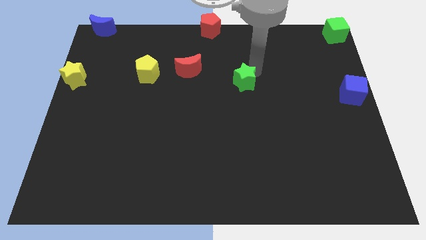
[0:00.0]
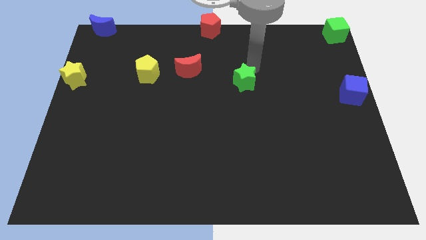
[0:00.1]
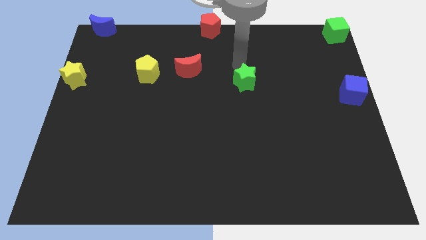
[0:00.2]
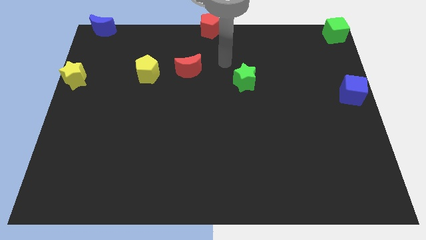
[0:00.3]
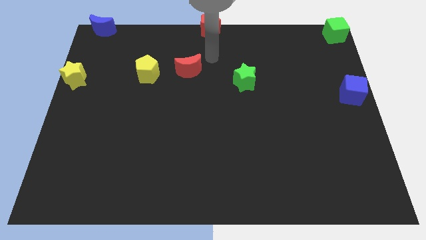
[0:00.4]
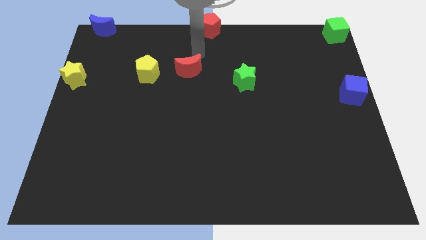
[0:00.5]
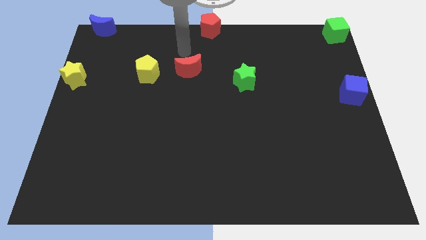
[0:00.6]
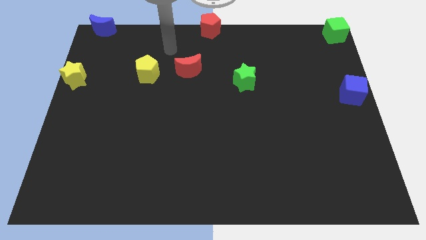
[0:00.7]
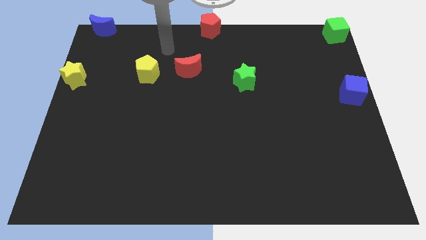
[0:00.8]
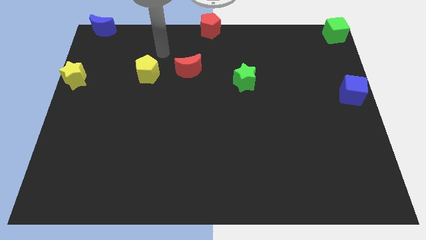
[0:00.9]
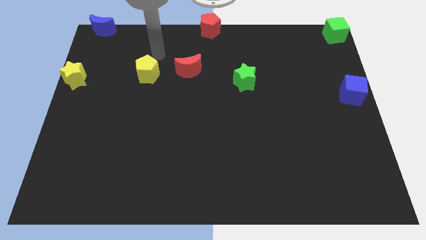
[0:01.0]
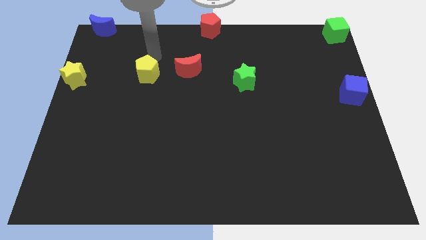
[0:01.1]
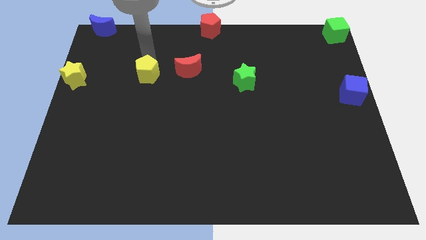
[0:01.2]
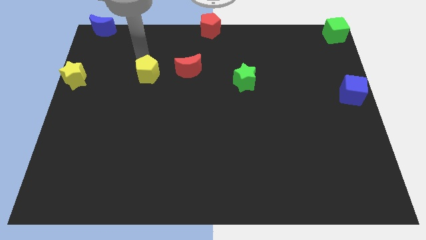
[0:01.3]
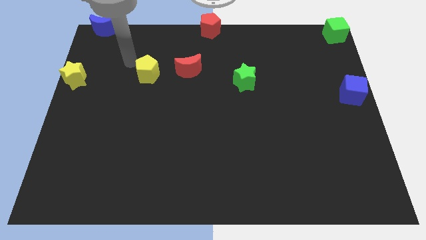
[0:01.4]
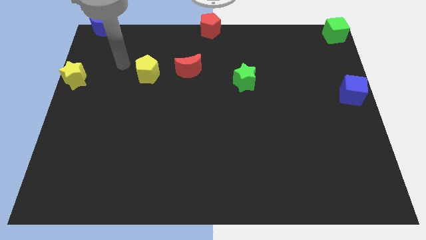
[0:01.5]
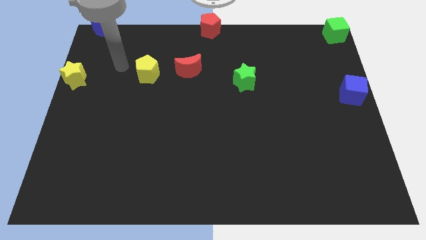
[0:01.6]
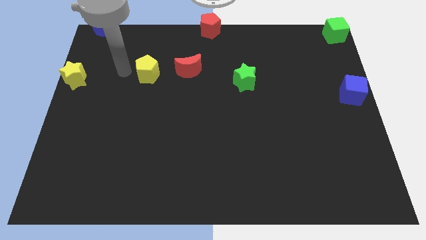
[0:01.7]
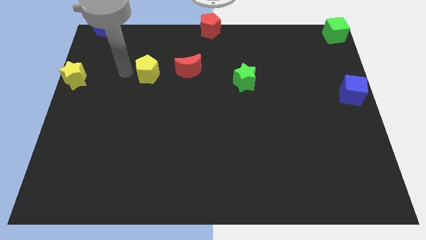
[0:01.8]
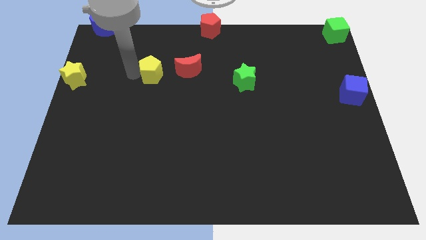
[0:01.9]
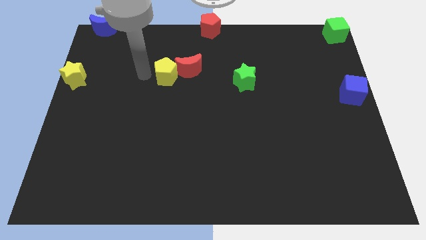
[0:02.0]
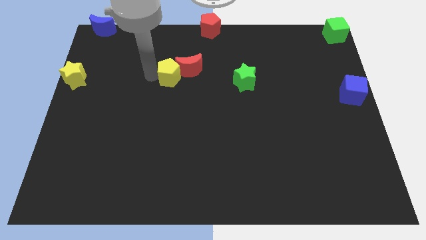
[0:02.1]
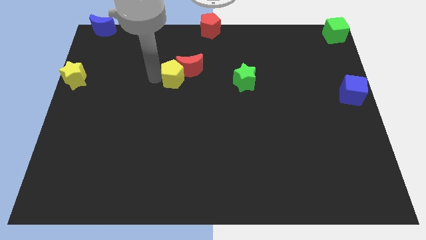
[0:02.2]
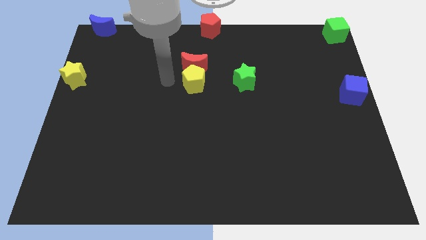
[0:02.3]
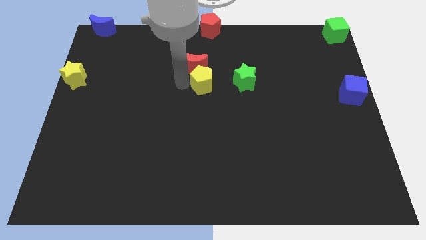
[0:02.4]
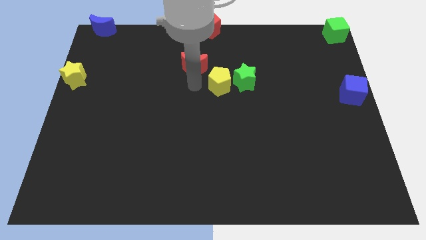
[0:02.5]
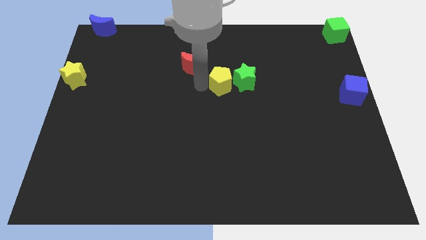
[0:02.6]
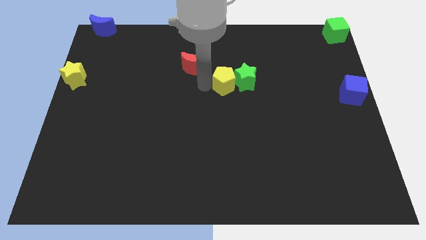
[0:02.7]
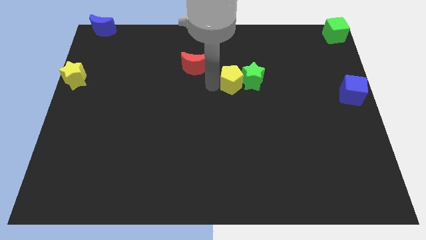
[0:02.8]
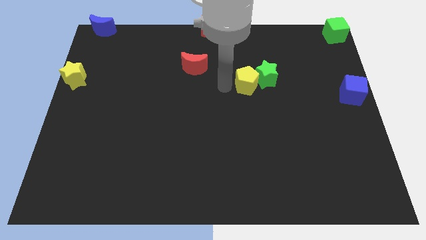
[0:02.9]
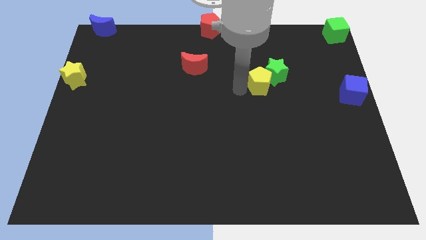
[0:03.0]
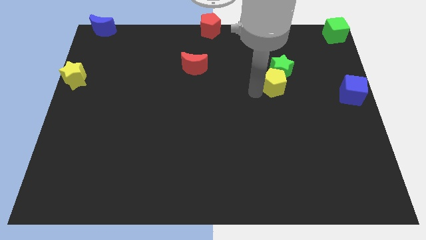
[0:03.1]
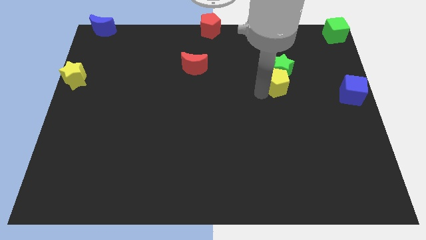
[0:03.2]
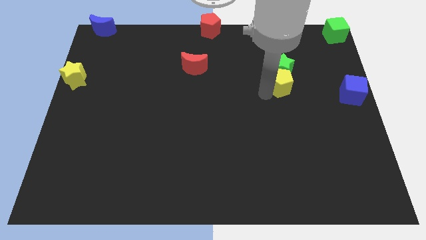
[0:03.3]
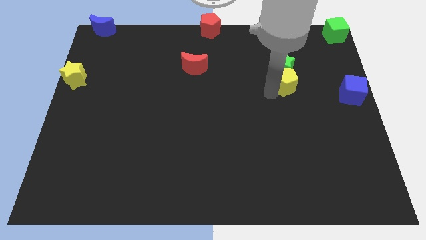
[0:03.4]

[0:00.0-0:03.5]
place the yellow pentagon vertically below the green star

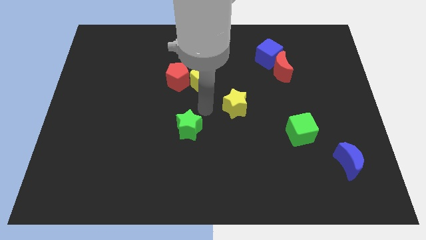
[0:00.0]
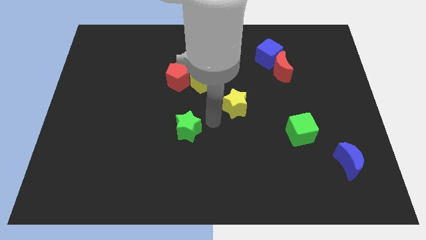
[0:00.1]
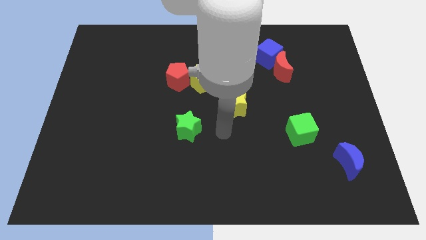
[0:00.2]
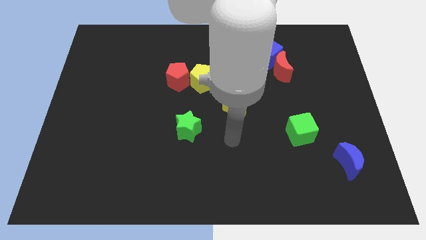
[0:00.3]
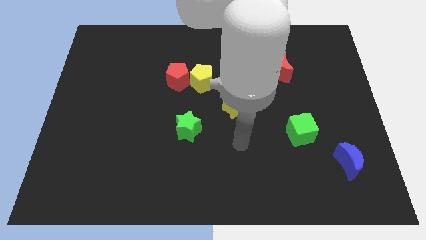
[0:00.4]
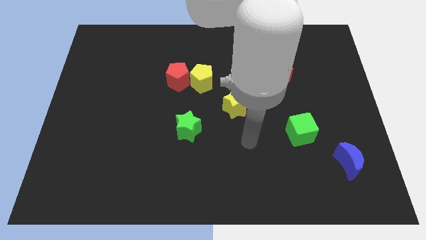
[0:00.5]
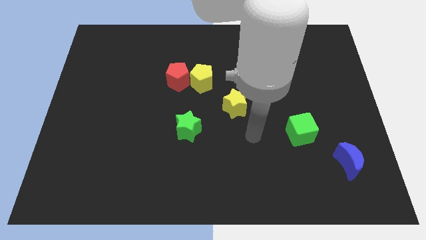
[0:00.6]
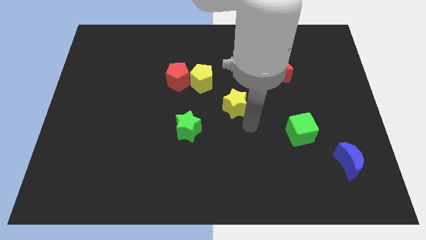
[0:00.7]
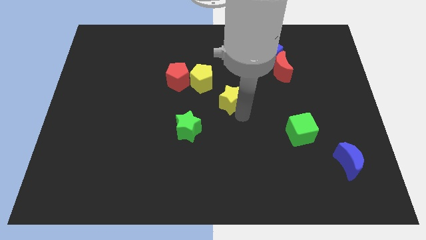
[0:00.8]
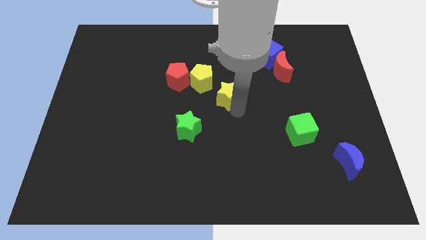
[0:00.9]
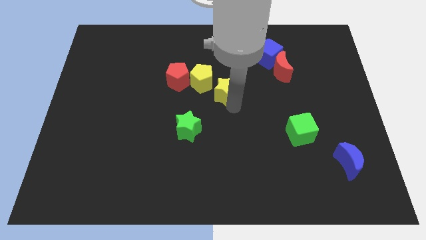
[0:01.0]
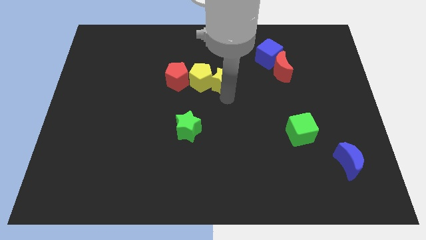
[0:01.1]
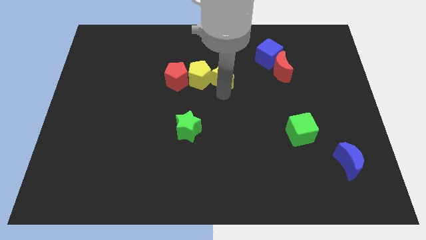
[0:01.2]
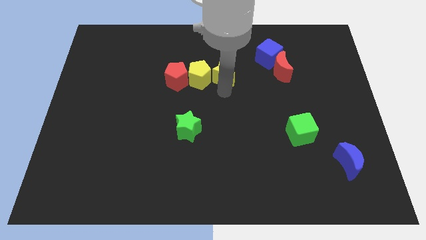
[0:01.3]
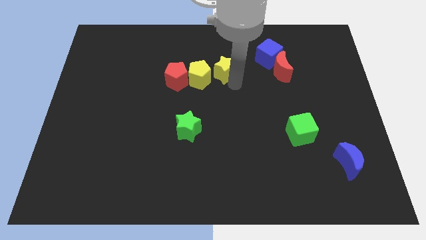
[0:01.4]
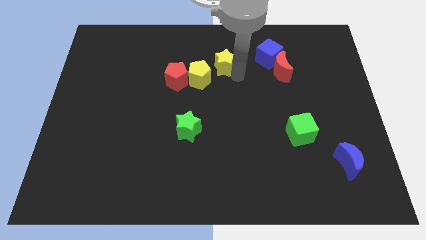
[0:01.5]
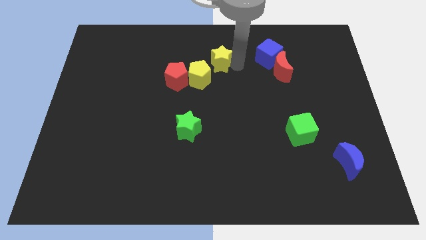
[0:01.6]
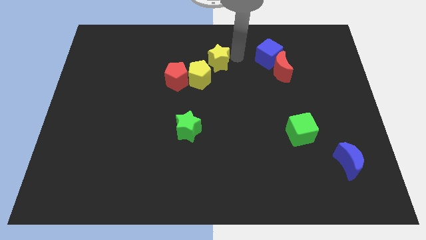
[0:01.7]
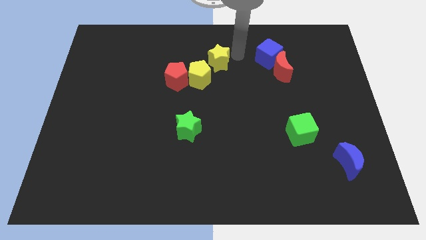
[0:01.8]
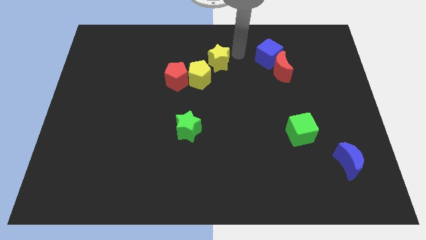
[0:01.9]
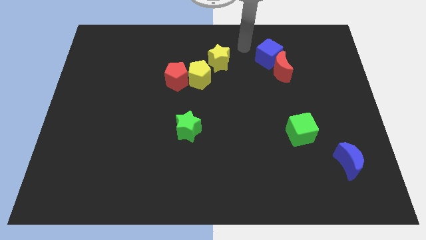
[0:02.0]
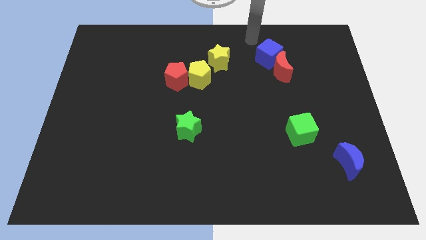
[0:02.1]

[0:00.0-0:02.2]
move the yellow star up slightly

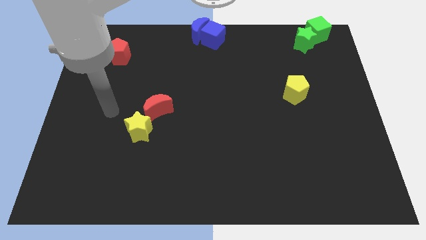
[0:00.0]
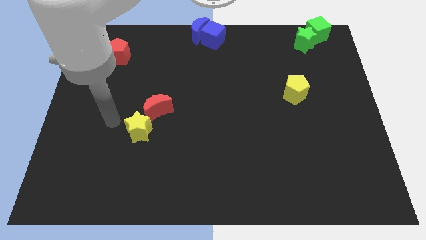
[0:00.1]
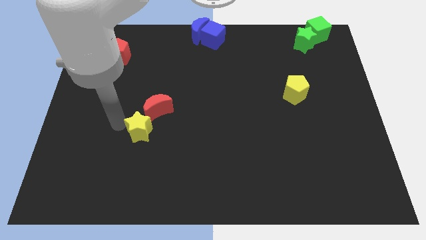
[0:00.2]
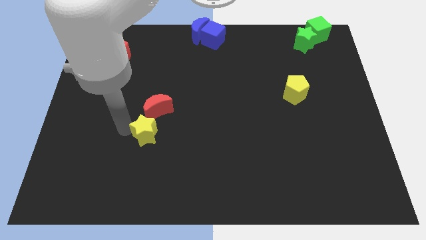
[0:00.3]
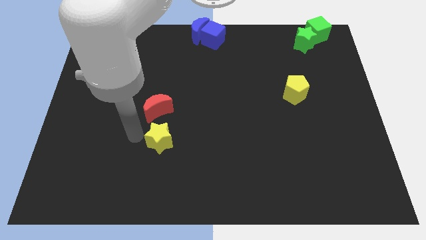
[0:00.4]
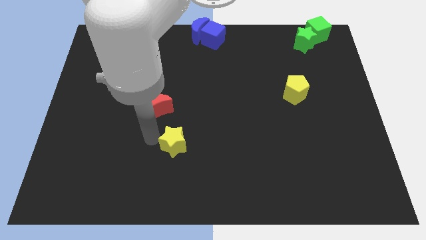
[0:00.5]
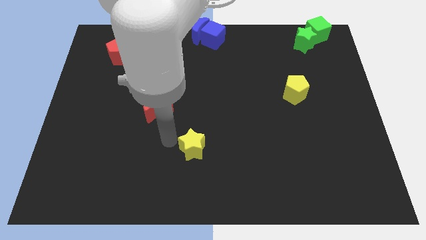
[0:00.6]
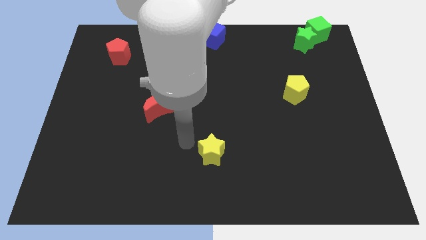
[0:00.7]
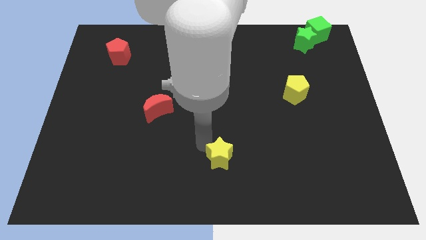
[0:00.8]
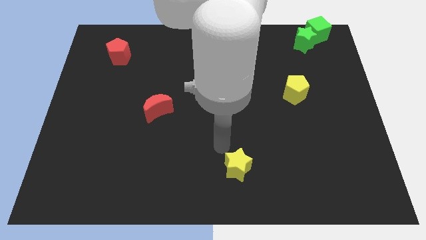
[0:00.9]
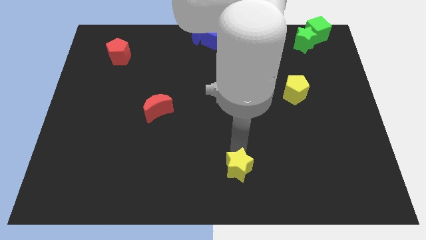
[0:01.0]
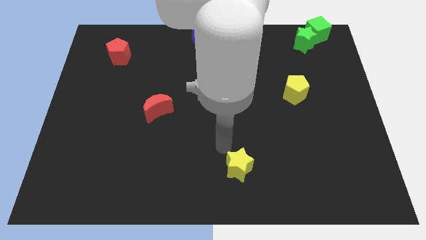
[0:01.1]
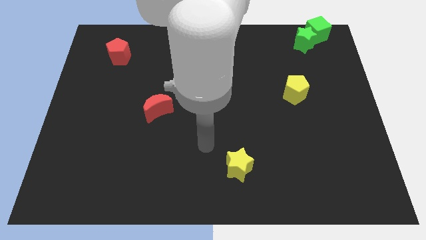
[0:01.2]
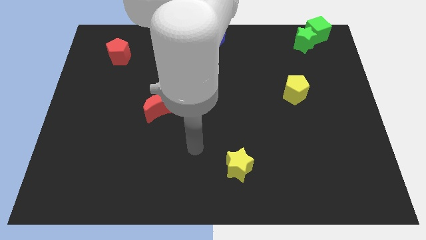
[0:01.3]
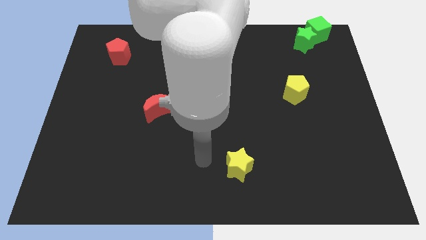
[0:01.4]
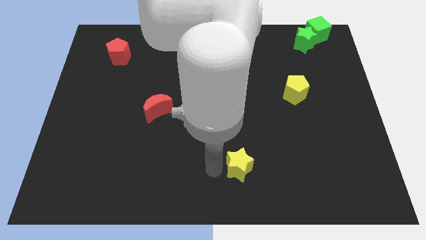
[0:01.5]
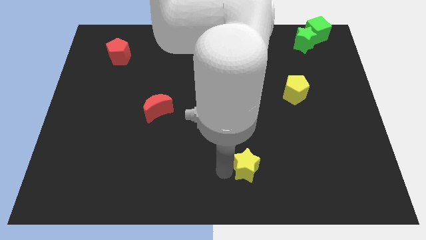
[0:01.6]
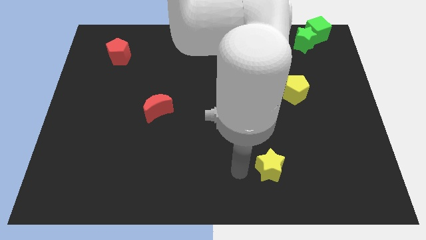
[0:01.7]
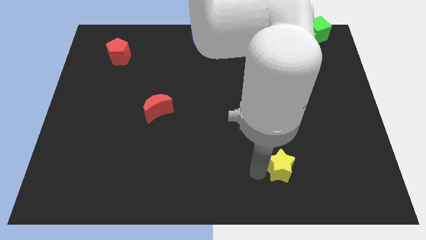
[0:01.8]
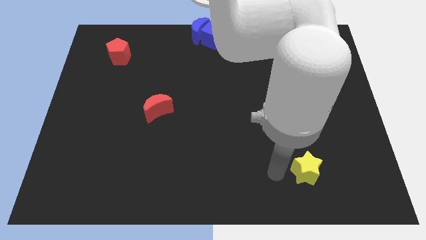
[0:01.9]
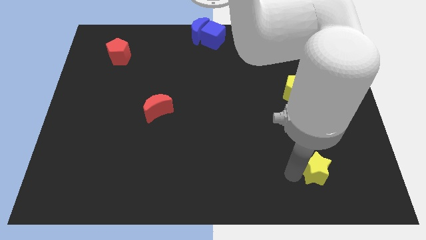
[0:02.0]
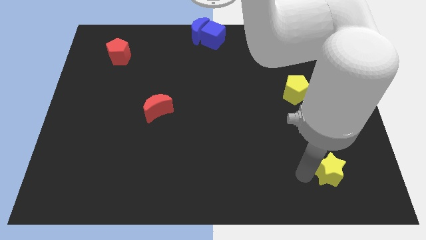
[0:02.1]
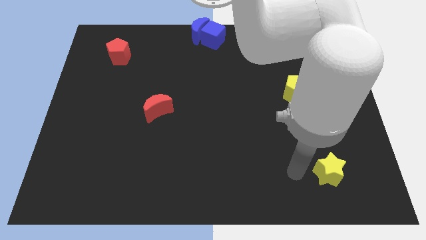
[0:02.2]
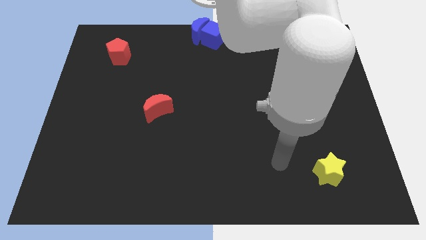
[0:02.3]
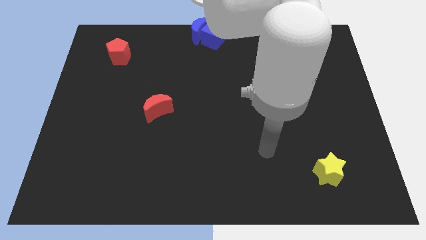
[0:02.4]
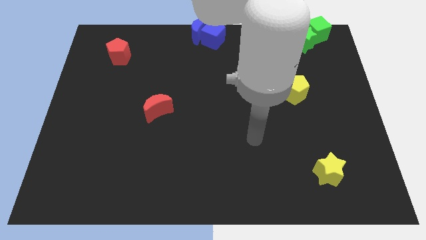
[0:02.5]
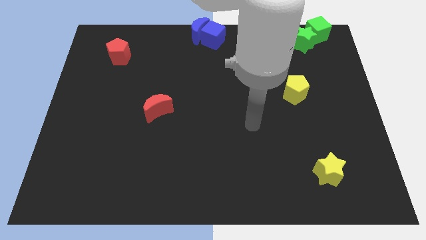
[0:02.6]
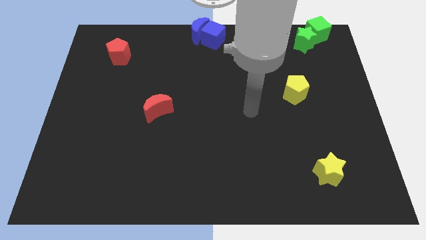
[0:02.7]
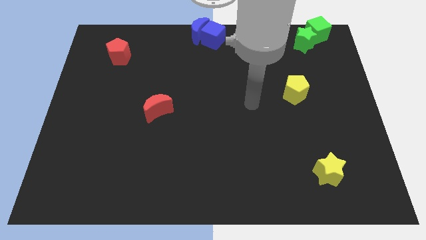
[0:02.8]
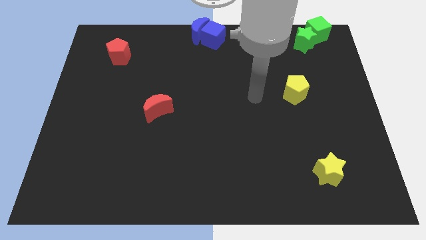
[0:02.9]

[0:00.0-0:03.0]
place the yellow star below the yellow pentagon

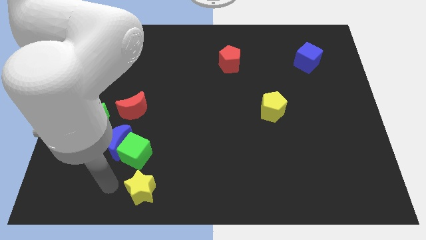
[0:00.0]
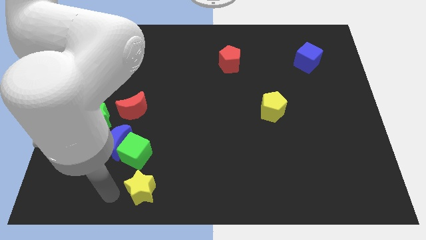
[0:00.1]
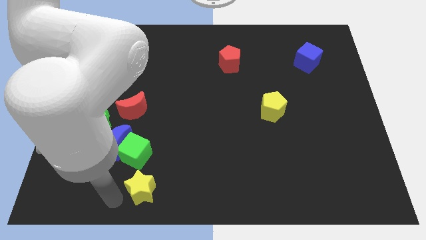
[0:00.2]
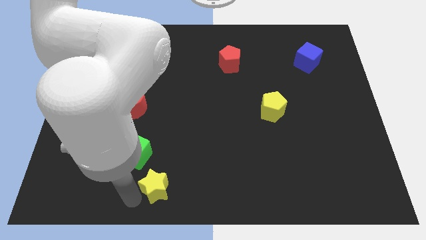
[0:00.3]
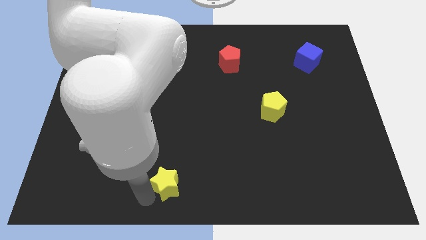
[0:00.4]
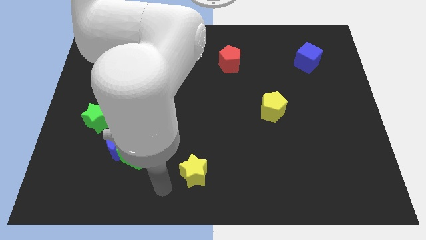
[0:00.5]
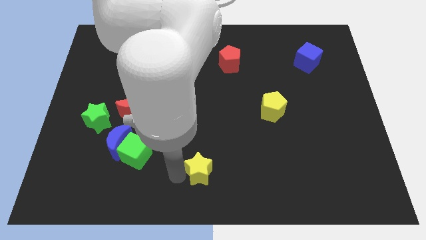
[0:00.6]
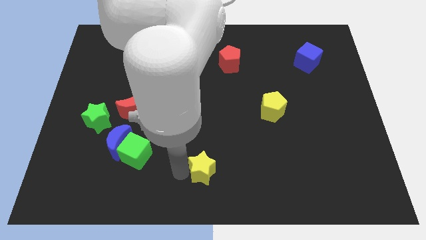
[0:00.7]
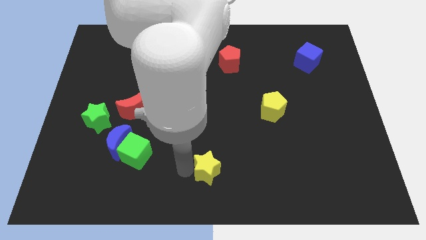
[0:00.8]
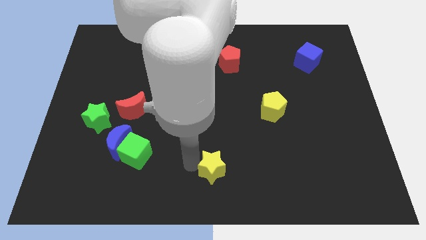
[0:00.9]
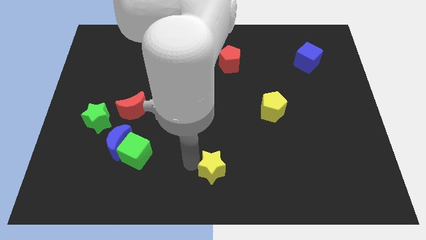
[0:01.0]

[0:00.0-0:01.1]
push the yellow star to the bottom right of the red crescent
